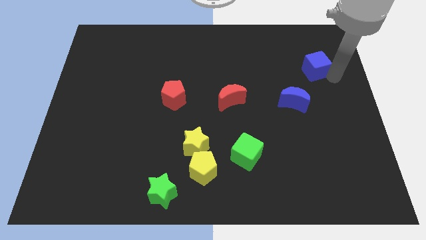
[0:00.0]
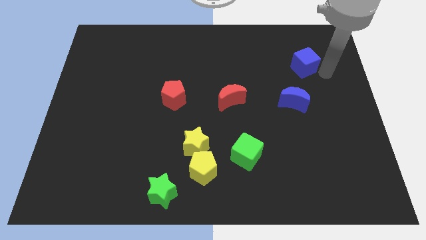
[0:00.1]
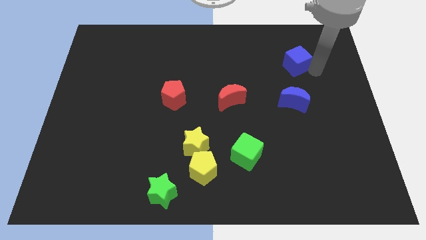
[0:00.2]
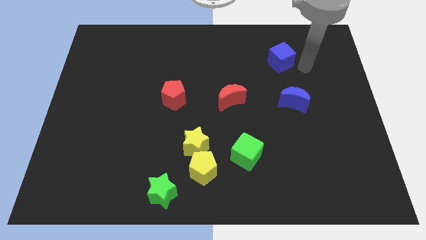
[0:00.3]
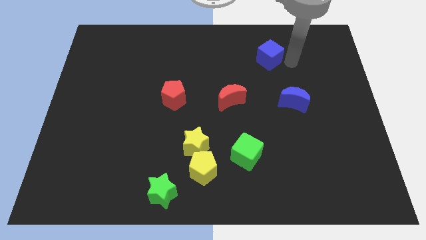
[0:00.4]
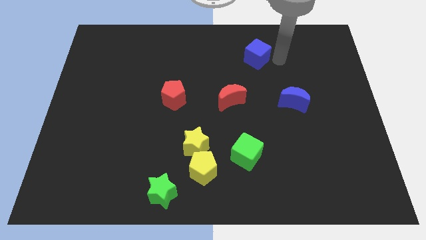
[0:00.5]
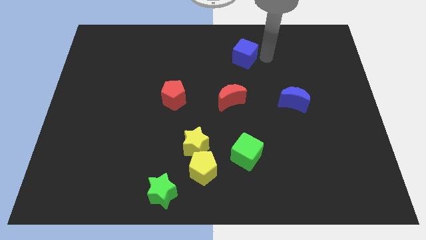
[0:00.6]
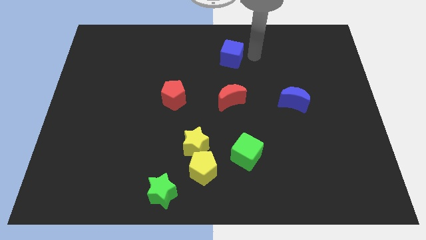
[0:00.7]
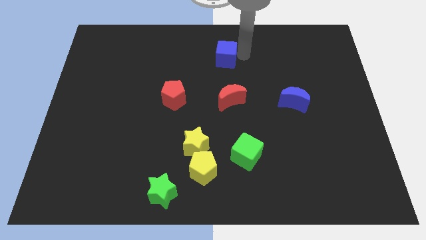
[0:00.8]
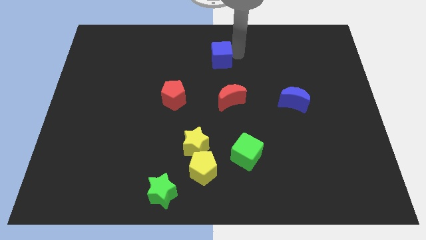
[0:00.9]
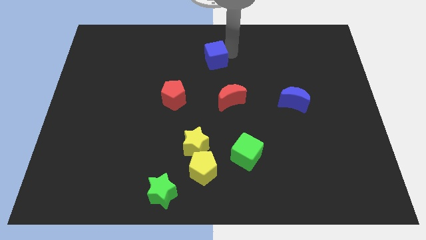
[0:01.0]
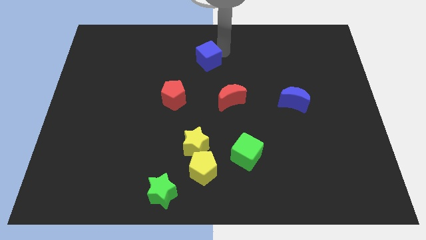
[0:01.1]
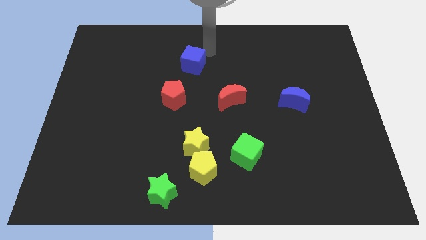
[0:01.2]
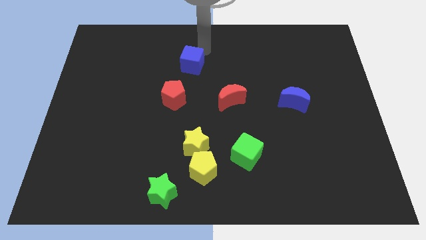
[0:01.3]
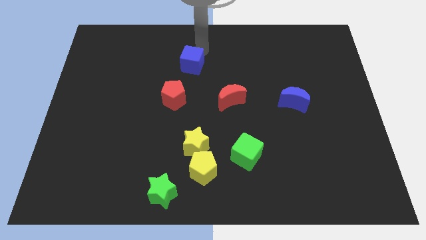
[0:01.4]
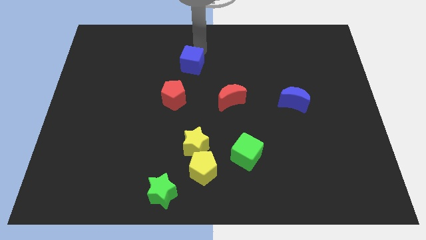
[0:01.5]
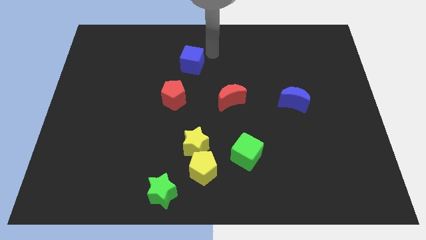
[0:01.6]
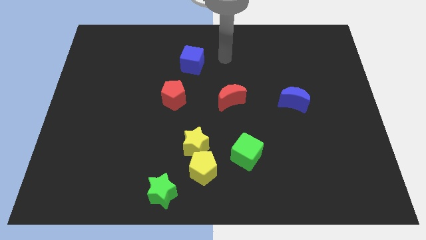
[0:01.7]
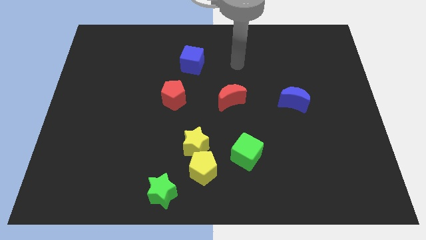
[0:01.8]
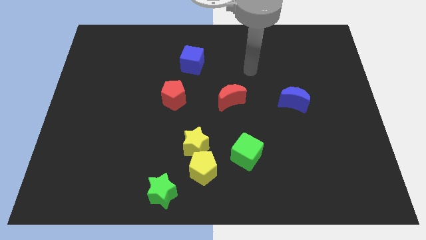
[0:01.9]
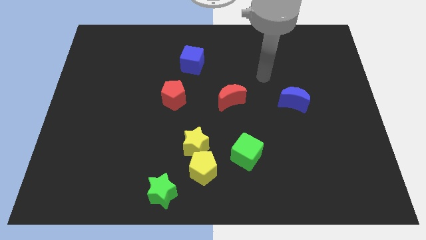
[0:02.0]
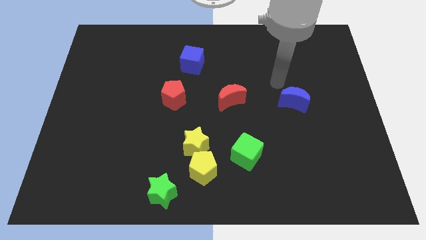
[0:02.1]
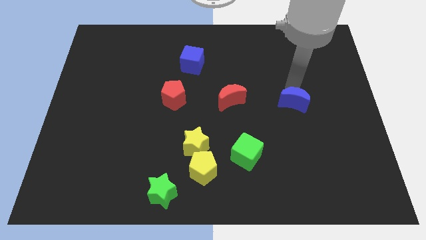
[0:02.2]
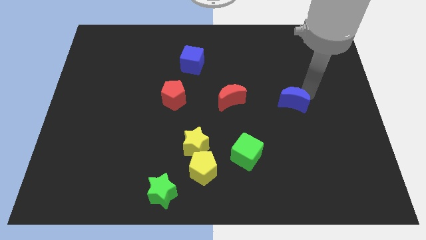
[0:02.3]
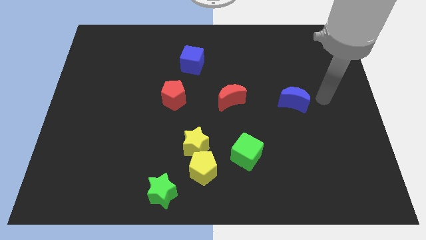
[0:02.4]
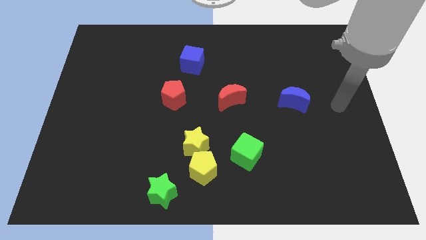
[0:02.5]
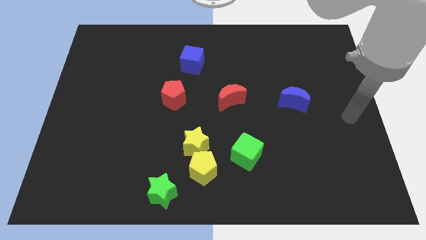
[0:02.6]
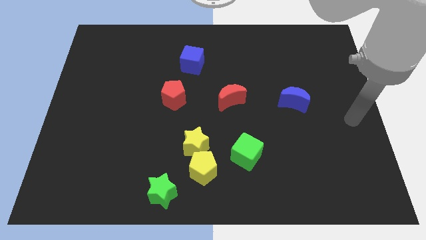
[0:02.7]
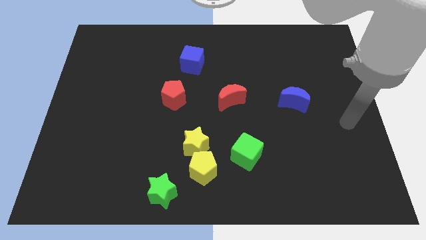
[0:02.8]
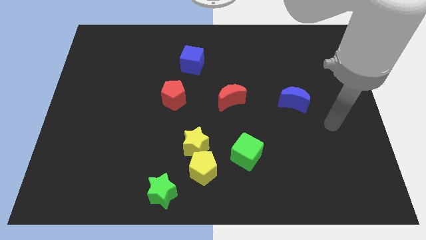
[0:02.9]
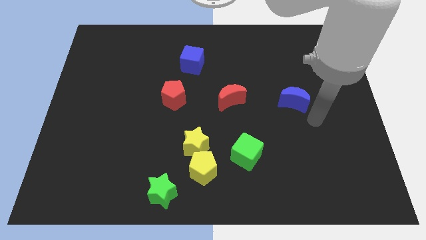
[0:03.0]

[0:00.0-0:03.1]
slide the blue cube diagonally top left to the red moon

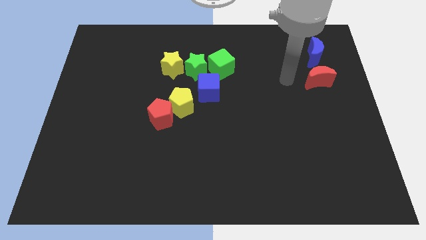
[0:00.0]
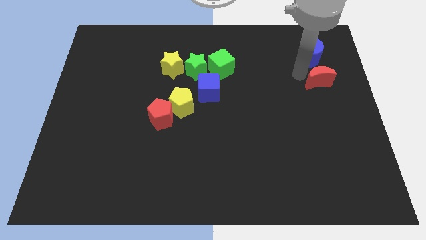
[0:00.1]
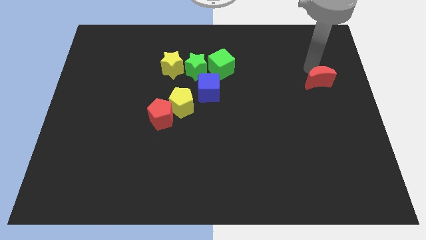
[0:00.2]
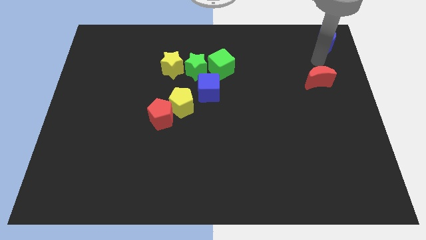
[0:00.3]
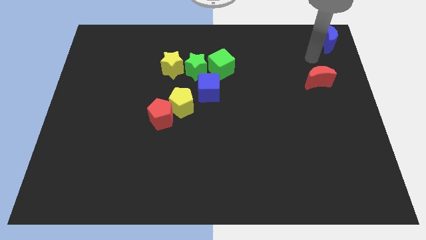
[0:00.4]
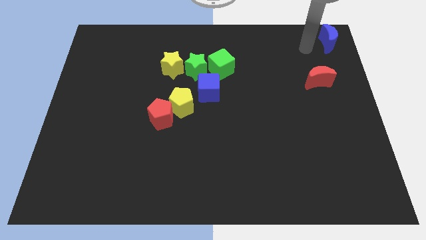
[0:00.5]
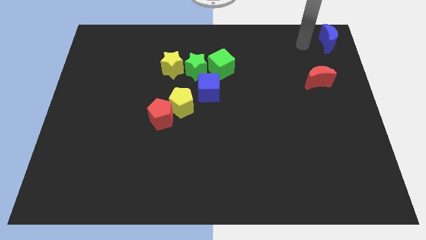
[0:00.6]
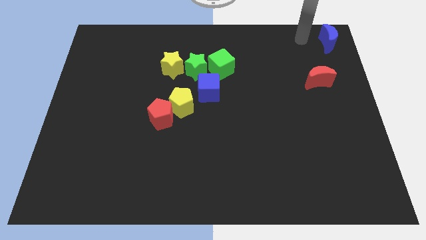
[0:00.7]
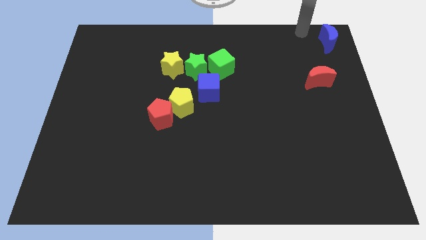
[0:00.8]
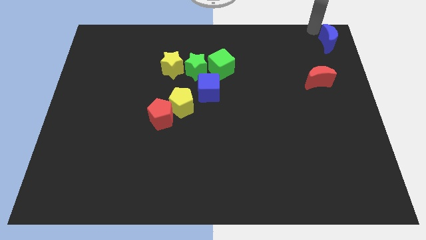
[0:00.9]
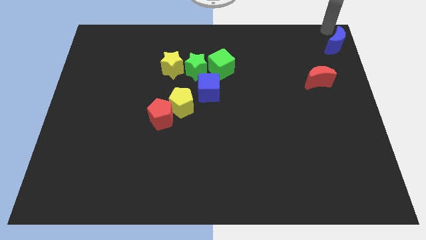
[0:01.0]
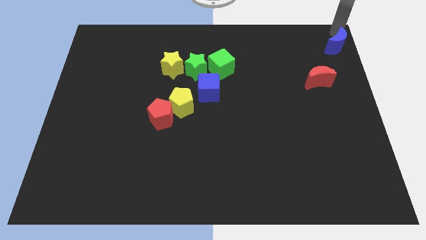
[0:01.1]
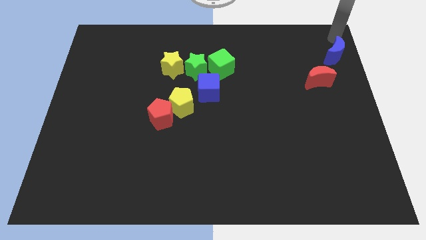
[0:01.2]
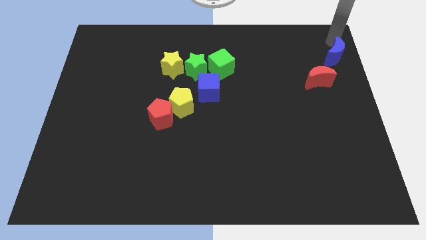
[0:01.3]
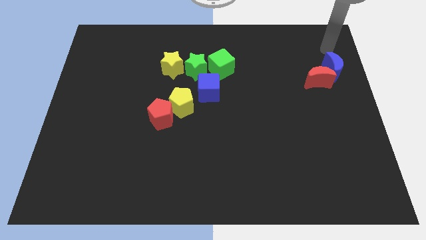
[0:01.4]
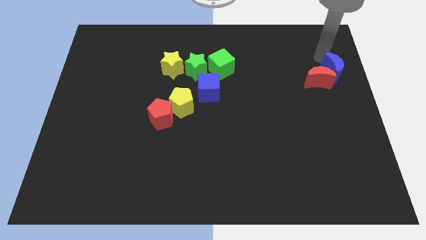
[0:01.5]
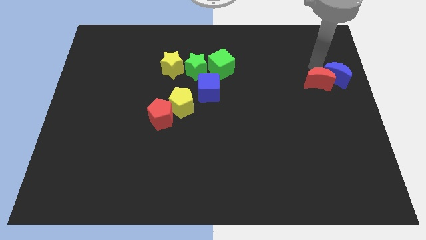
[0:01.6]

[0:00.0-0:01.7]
push blue crescent into the red crescent

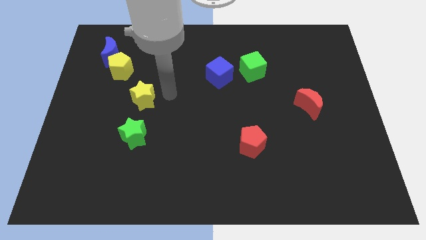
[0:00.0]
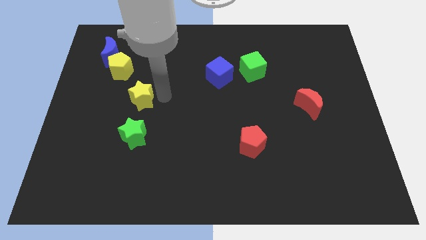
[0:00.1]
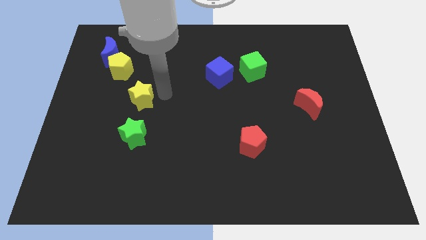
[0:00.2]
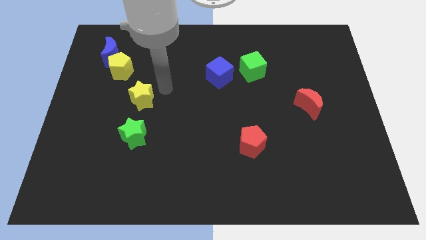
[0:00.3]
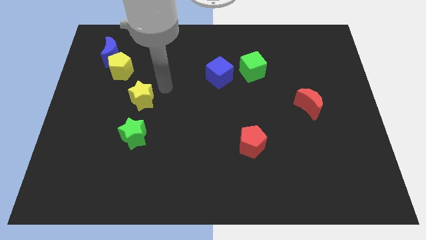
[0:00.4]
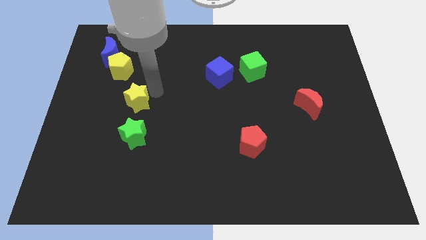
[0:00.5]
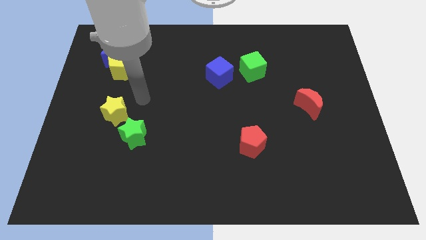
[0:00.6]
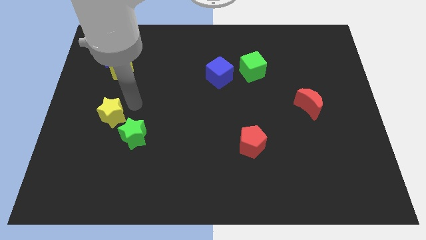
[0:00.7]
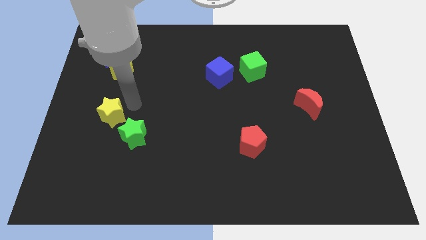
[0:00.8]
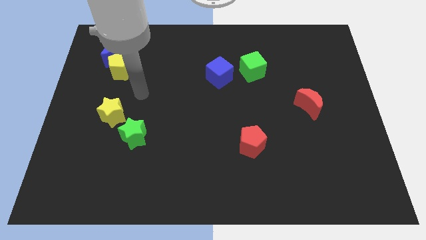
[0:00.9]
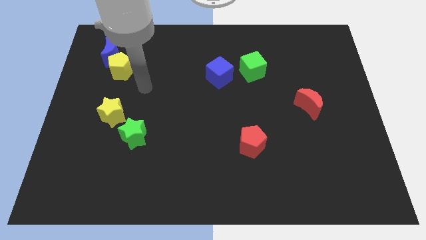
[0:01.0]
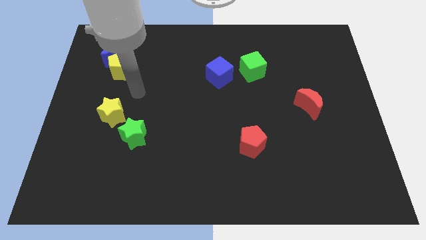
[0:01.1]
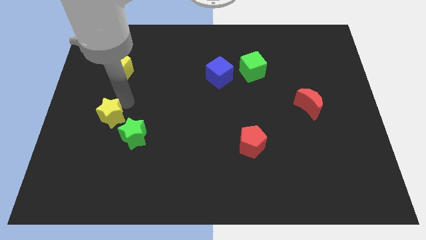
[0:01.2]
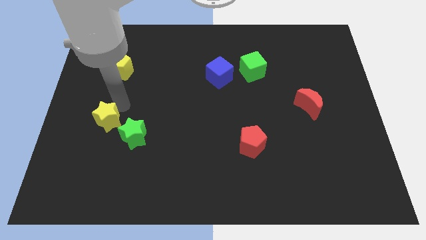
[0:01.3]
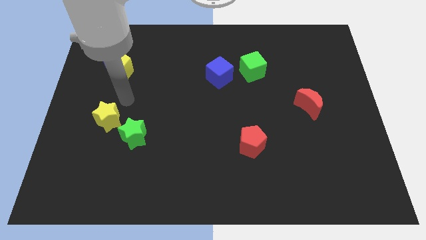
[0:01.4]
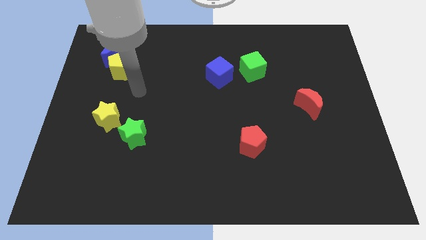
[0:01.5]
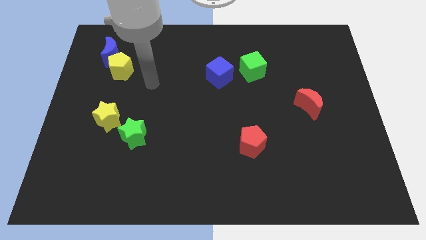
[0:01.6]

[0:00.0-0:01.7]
move the yellow star to the top left of the green star

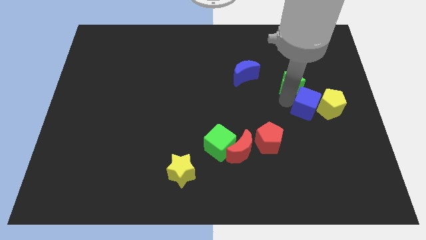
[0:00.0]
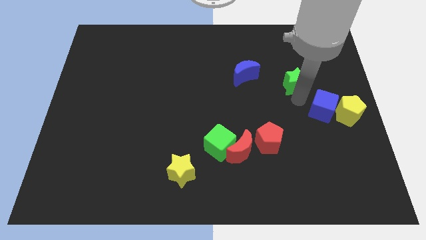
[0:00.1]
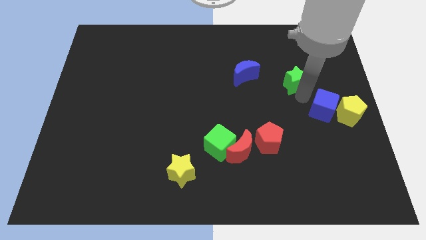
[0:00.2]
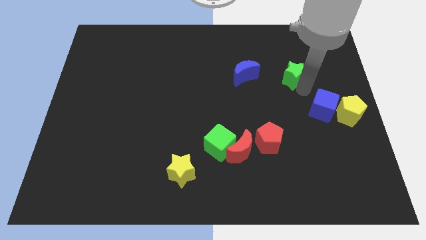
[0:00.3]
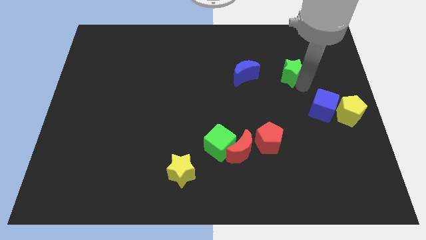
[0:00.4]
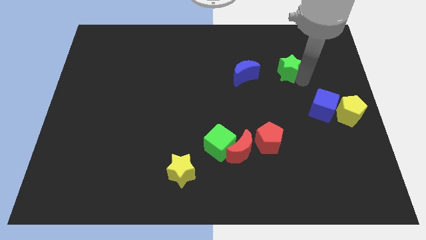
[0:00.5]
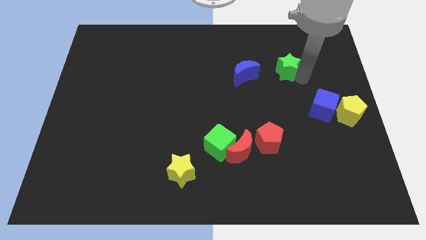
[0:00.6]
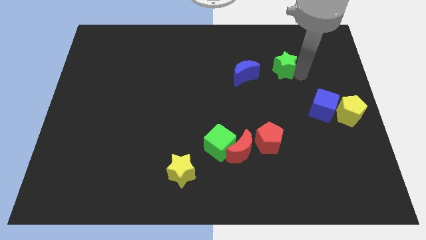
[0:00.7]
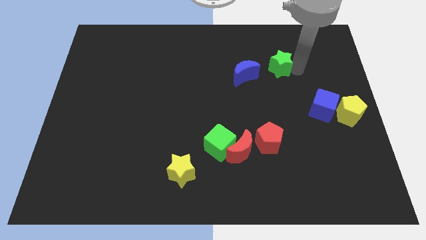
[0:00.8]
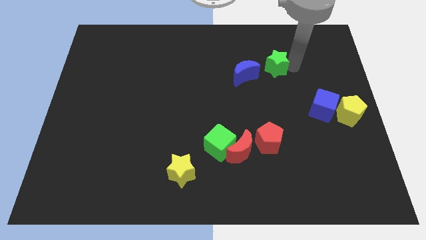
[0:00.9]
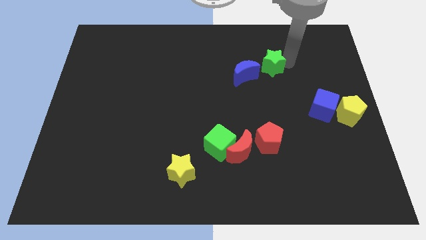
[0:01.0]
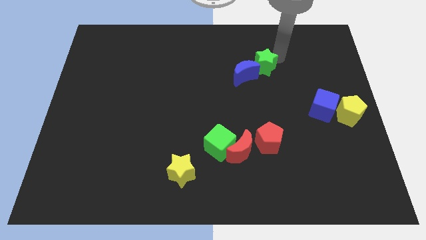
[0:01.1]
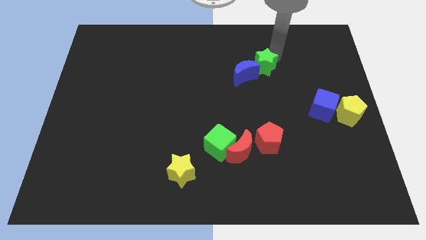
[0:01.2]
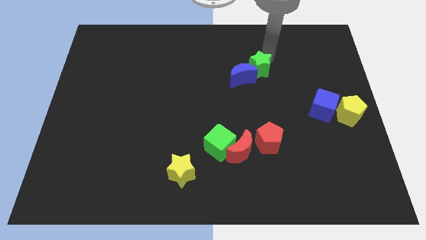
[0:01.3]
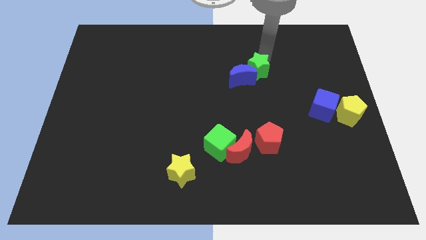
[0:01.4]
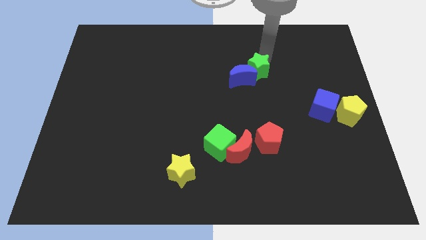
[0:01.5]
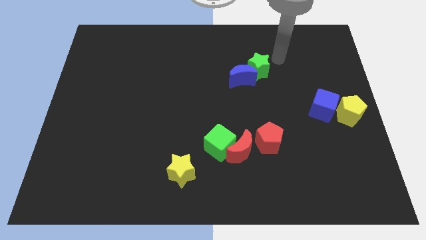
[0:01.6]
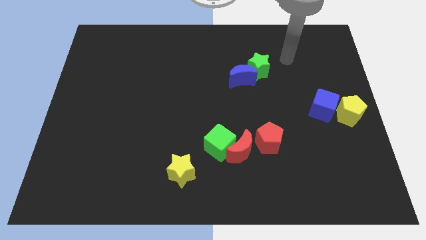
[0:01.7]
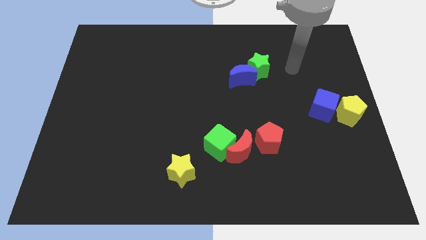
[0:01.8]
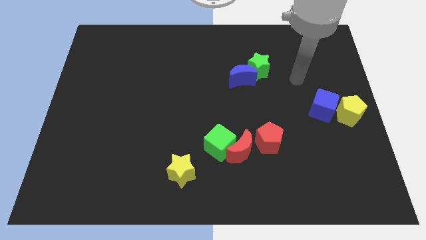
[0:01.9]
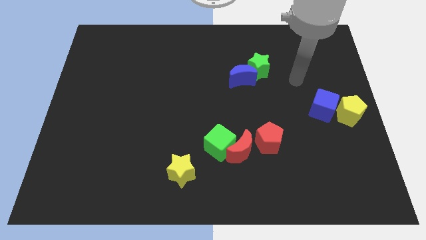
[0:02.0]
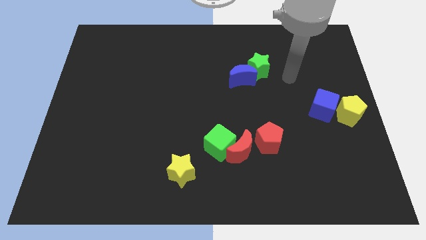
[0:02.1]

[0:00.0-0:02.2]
push the green star into the blue moon

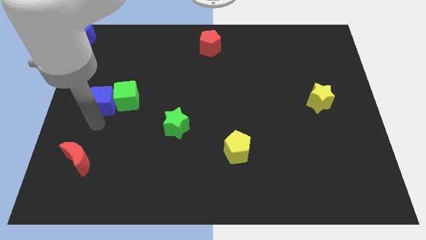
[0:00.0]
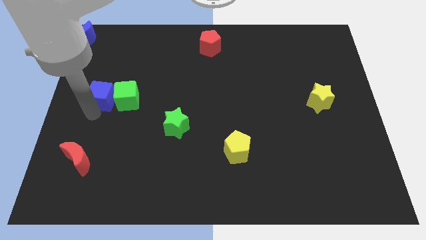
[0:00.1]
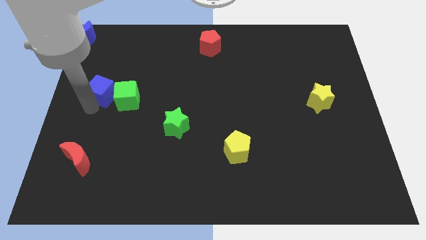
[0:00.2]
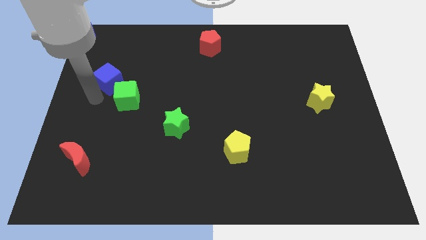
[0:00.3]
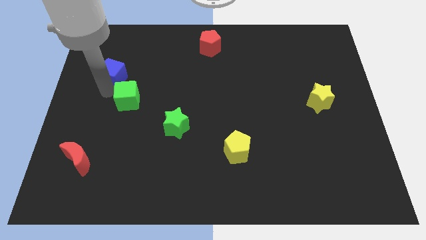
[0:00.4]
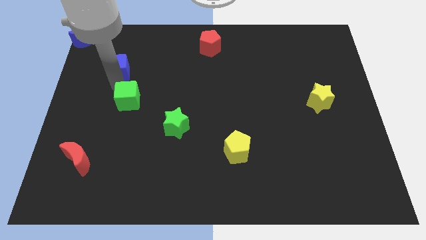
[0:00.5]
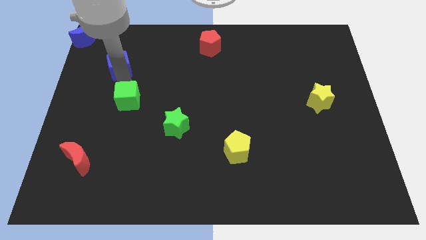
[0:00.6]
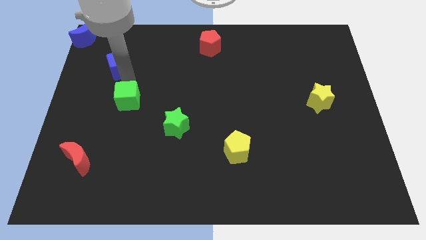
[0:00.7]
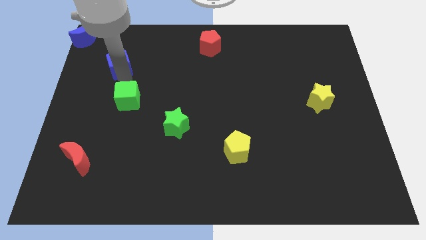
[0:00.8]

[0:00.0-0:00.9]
separate blue cube and green cube
